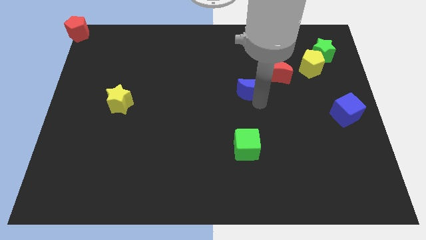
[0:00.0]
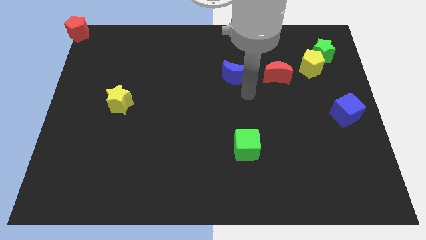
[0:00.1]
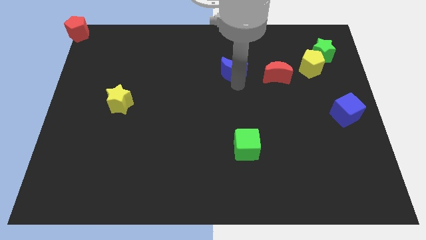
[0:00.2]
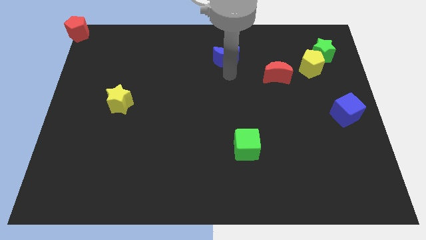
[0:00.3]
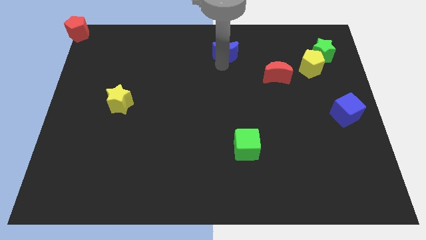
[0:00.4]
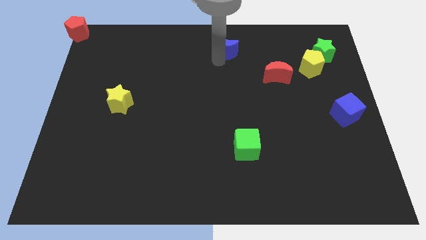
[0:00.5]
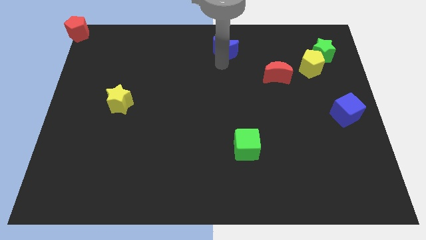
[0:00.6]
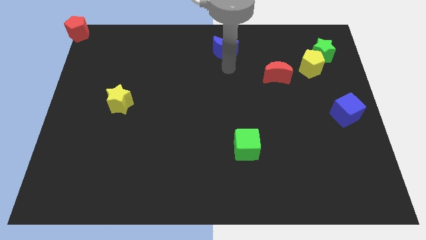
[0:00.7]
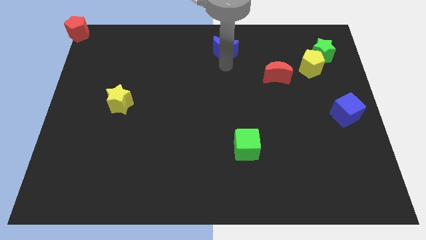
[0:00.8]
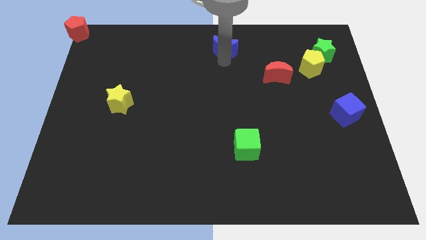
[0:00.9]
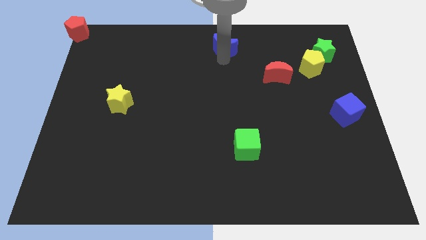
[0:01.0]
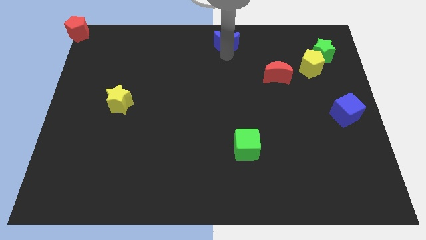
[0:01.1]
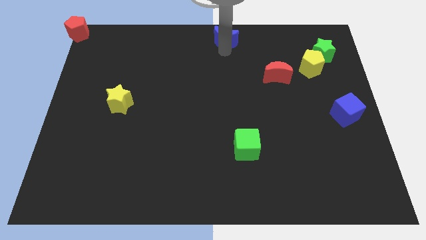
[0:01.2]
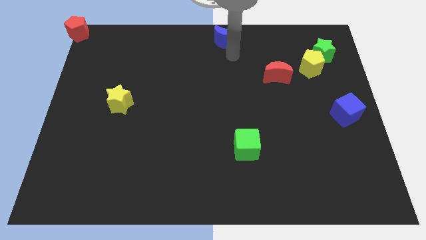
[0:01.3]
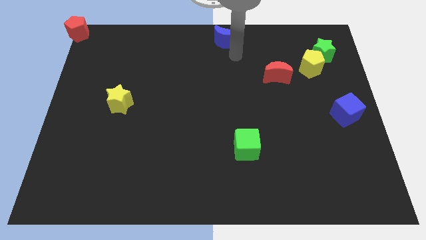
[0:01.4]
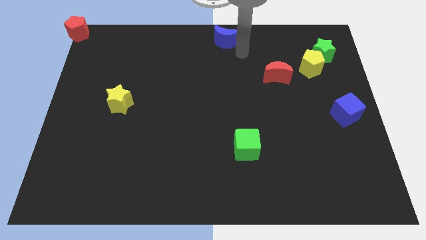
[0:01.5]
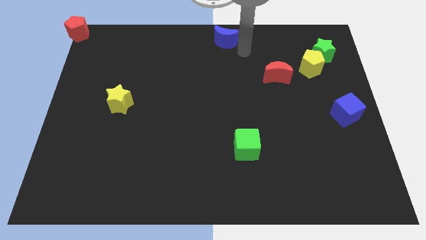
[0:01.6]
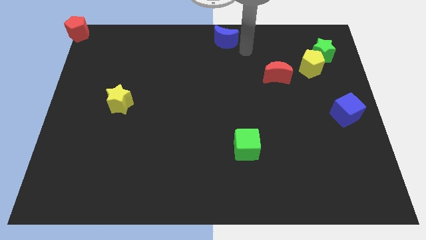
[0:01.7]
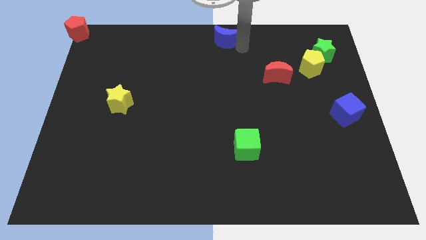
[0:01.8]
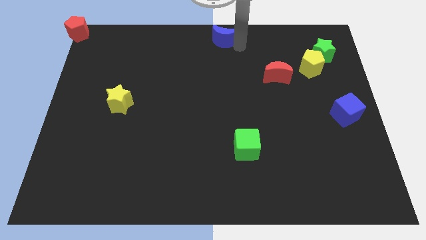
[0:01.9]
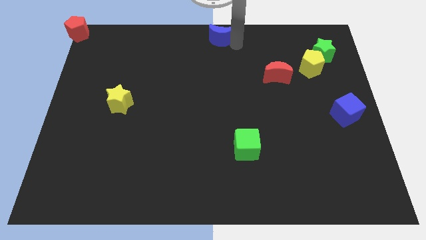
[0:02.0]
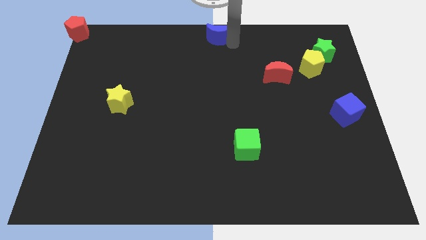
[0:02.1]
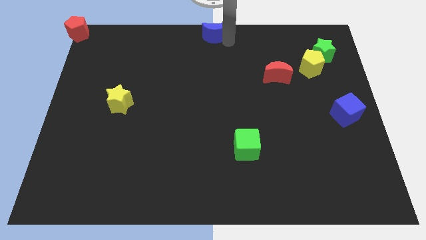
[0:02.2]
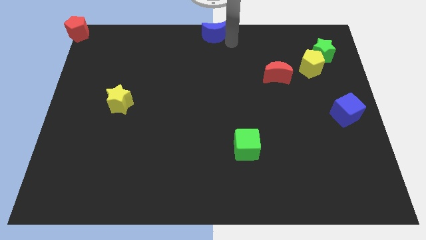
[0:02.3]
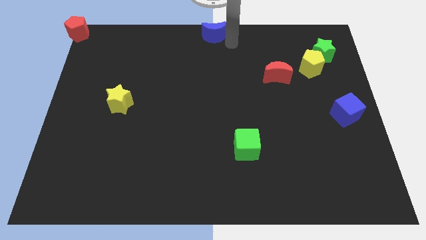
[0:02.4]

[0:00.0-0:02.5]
place blue crescent at top center of the board

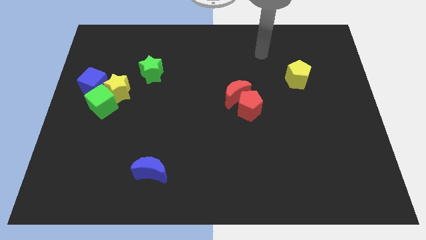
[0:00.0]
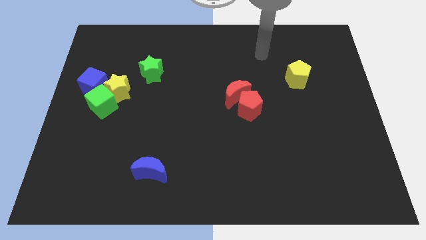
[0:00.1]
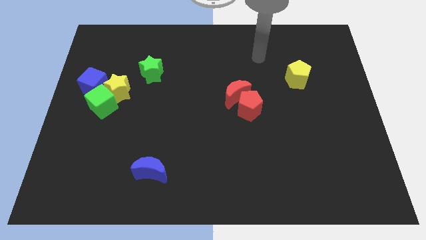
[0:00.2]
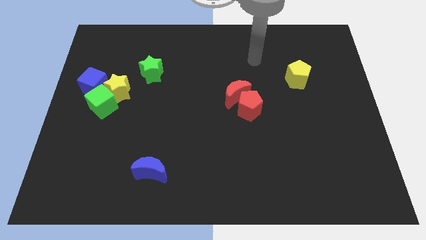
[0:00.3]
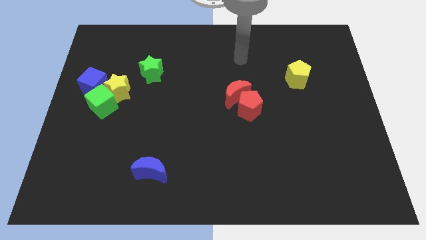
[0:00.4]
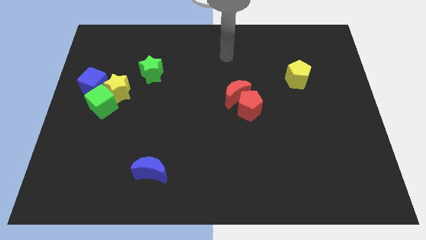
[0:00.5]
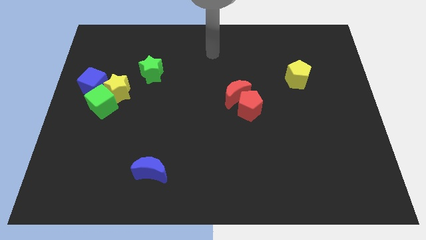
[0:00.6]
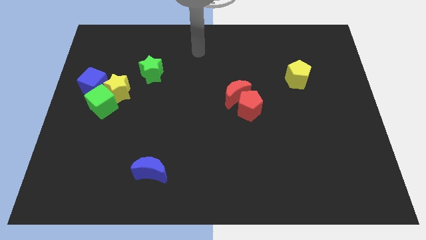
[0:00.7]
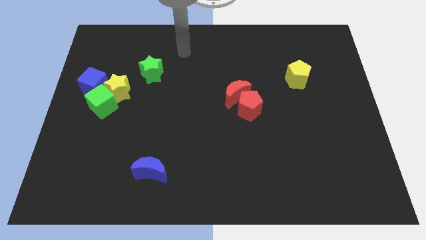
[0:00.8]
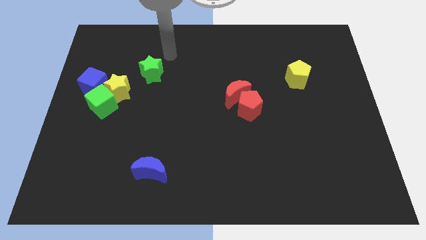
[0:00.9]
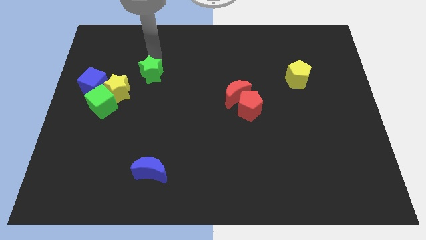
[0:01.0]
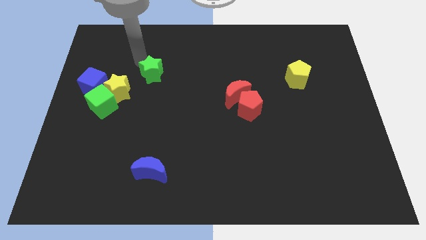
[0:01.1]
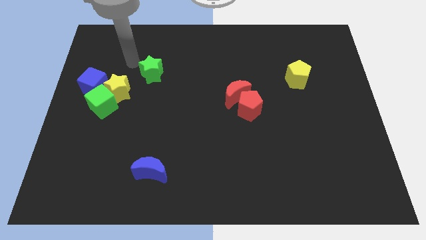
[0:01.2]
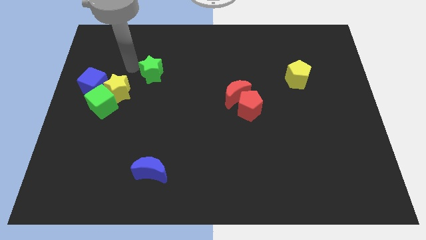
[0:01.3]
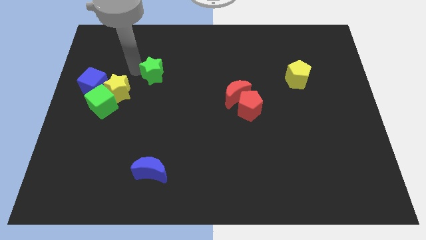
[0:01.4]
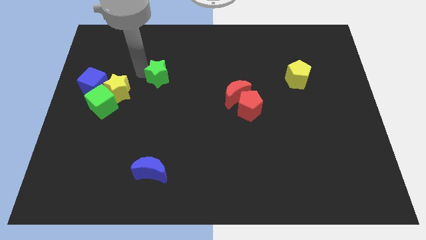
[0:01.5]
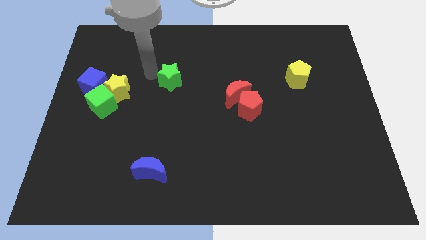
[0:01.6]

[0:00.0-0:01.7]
push the green star towards red crescent

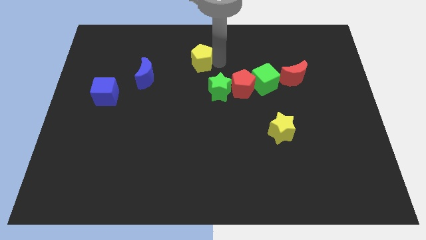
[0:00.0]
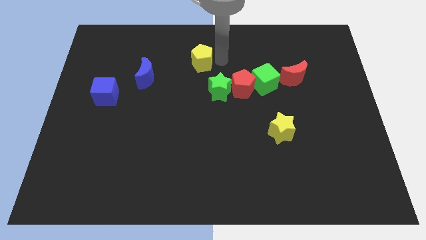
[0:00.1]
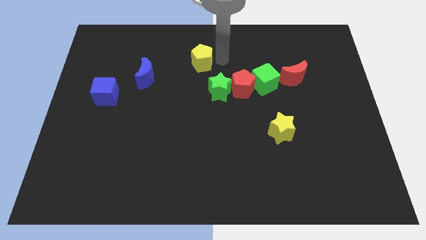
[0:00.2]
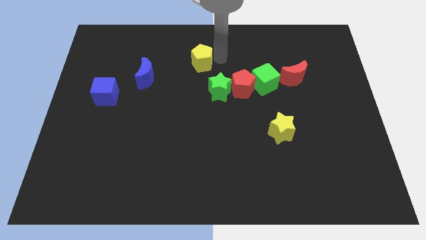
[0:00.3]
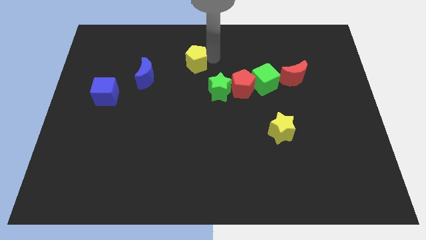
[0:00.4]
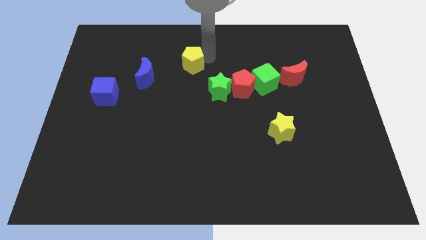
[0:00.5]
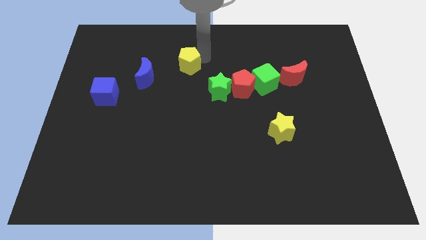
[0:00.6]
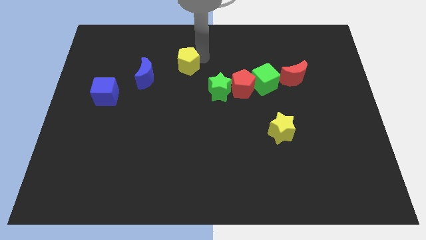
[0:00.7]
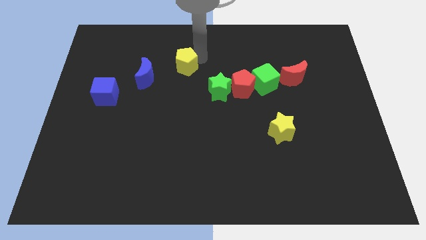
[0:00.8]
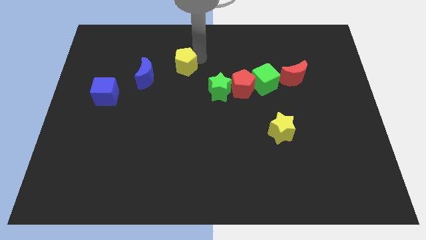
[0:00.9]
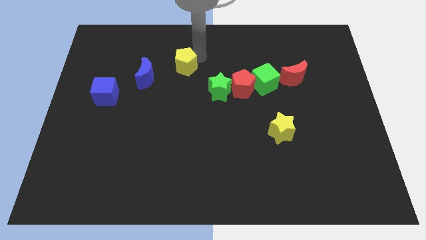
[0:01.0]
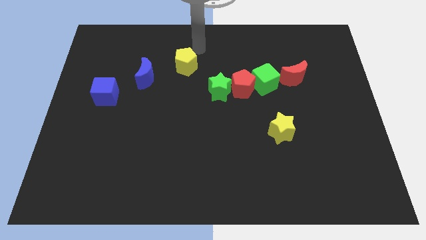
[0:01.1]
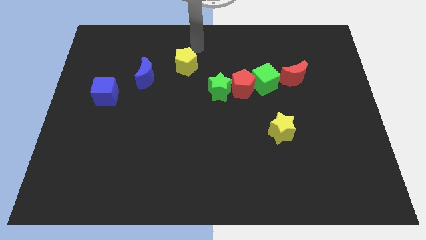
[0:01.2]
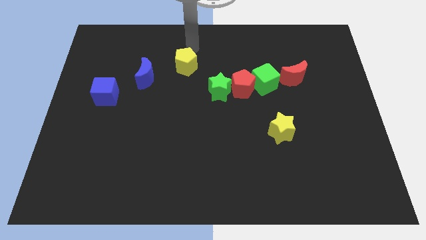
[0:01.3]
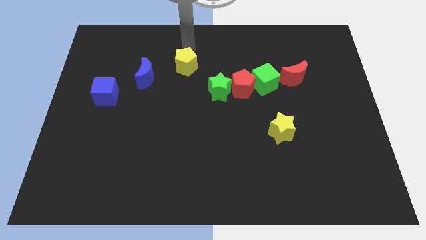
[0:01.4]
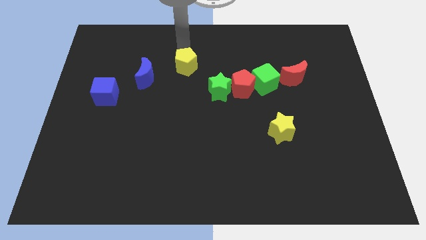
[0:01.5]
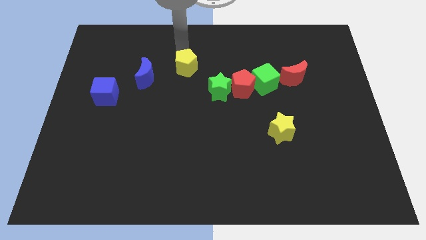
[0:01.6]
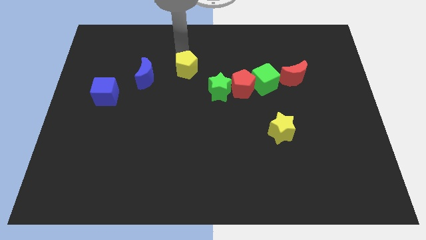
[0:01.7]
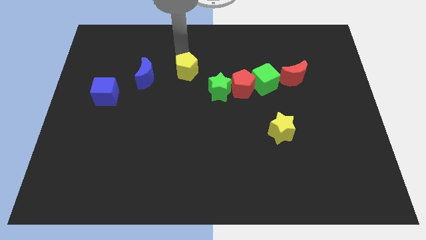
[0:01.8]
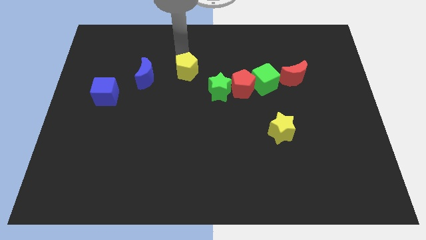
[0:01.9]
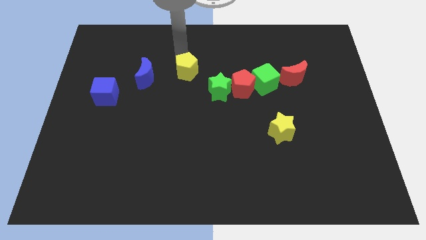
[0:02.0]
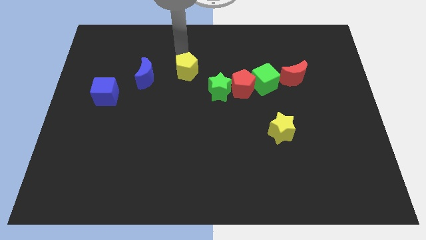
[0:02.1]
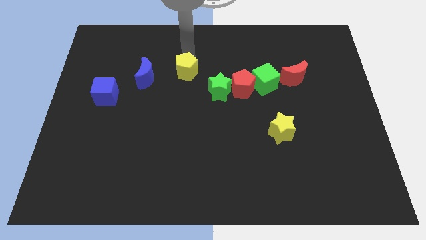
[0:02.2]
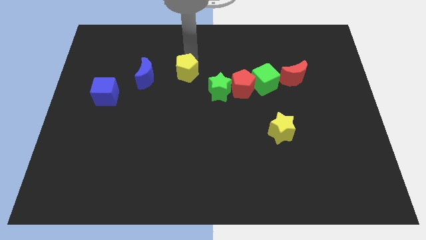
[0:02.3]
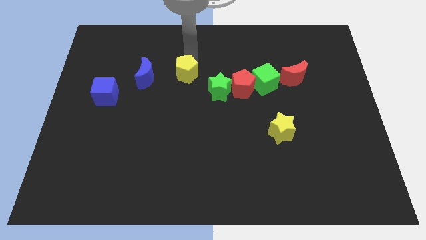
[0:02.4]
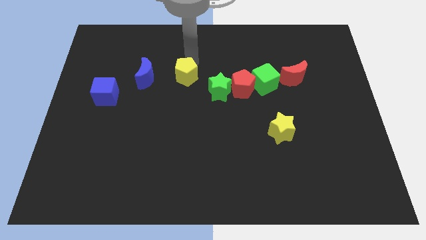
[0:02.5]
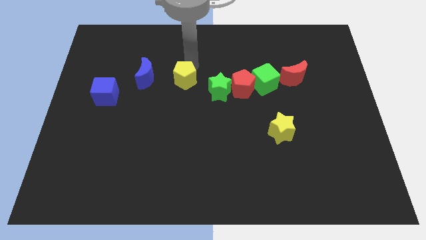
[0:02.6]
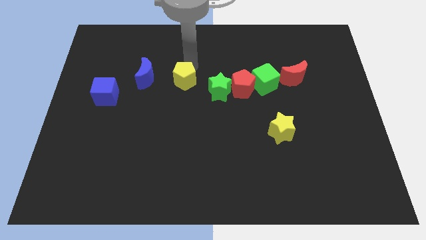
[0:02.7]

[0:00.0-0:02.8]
push the yellow pentagon right to the blue crescent

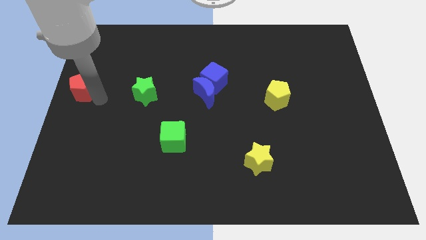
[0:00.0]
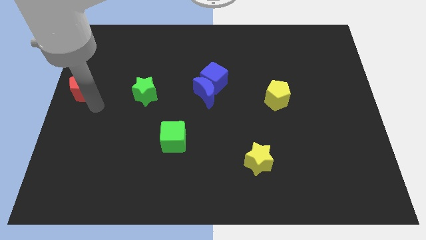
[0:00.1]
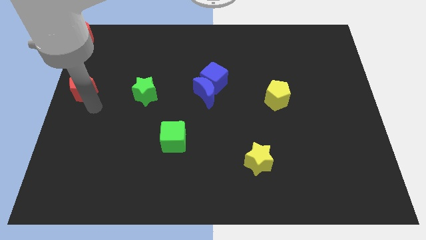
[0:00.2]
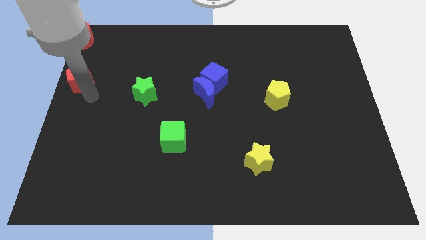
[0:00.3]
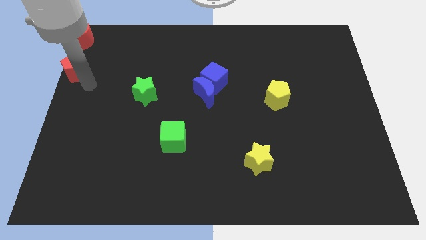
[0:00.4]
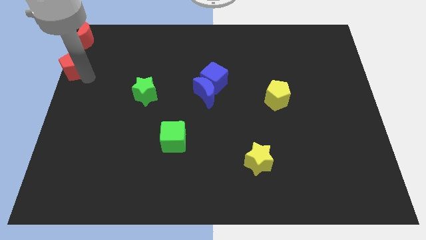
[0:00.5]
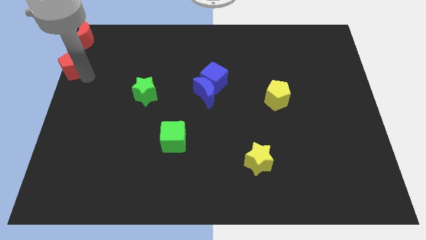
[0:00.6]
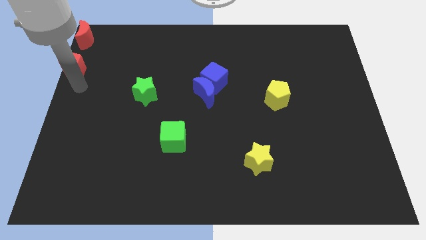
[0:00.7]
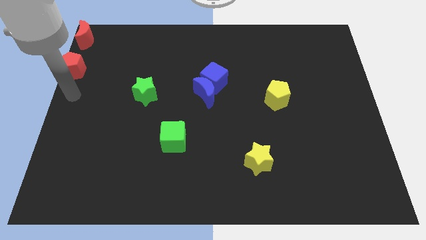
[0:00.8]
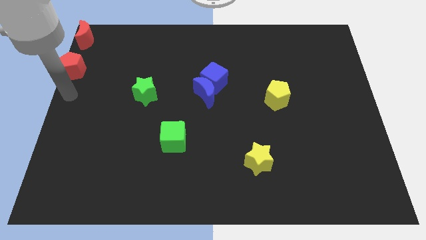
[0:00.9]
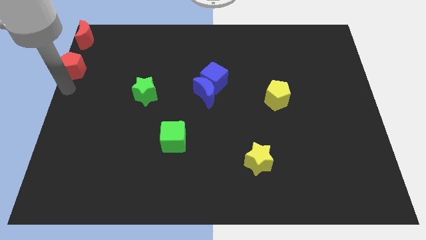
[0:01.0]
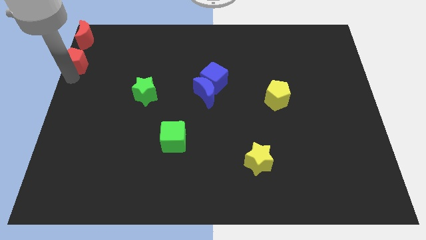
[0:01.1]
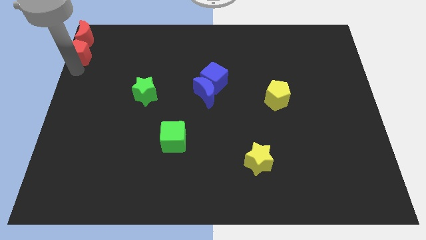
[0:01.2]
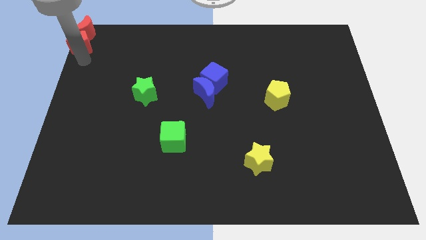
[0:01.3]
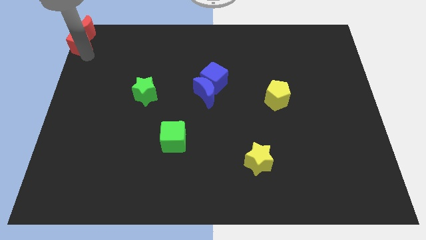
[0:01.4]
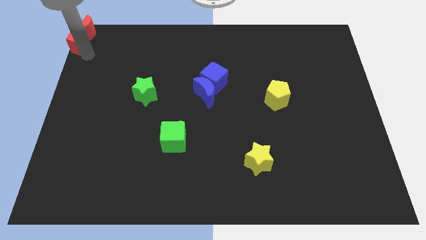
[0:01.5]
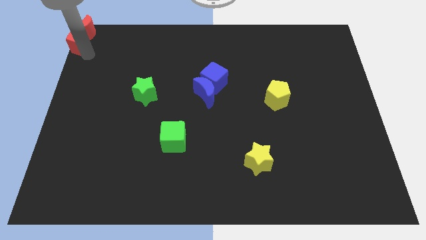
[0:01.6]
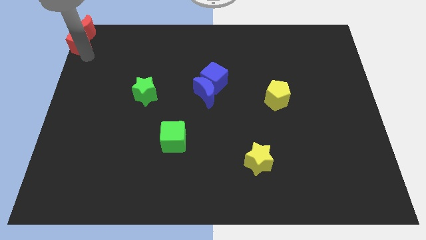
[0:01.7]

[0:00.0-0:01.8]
move the red pentagon below the red moon

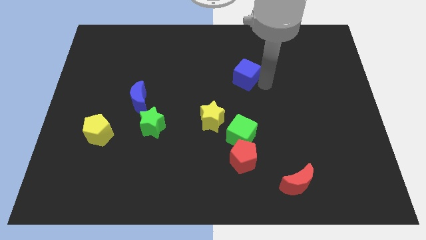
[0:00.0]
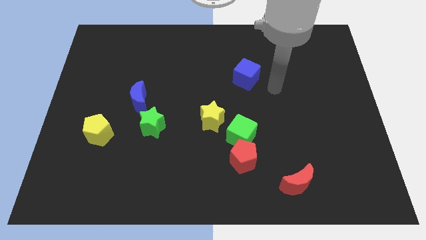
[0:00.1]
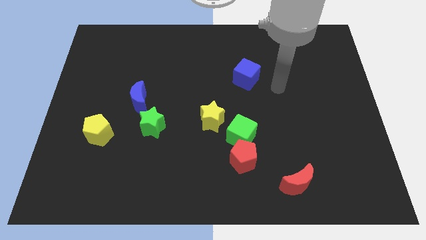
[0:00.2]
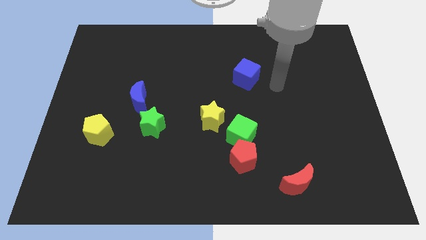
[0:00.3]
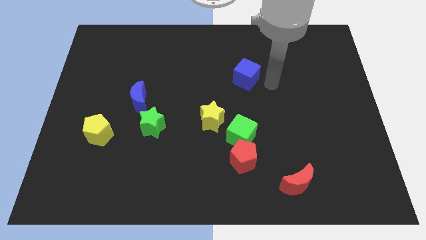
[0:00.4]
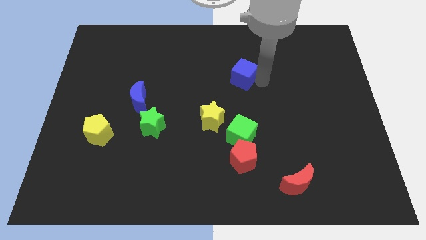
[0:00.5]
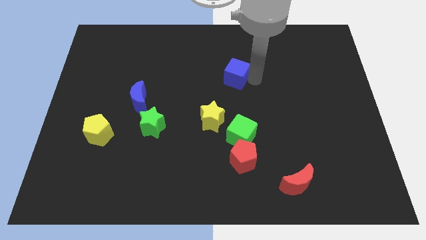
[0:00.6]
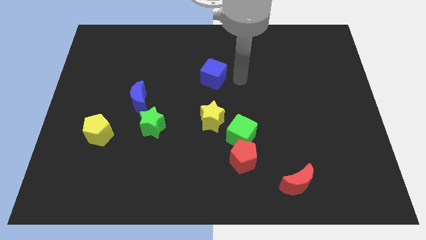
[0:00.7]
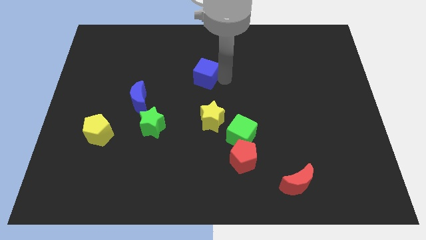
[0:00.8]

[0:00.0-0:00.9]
place the blue cube vertically above the yellow star
